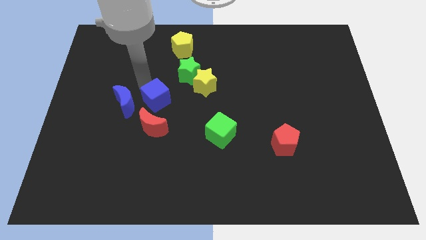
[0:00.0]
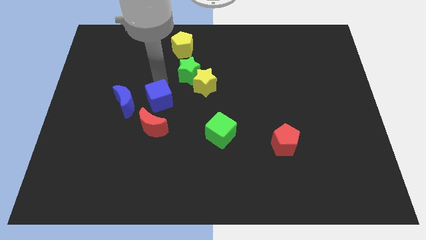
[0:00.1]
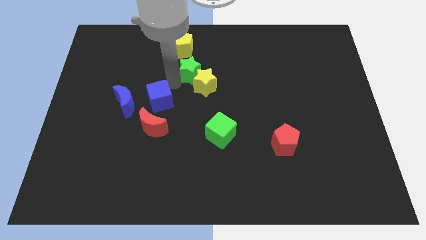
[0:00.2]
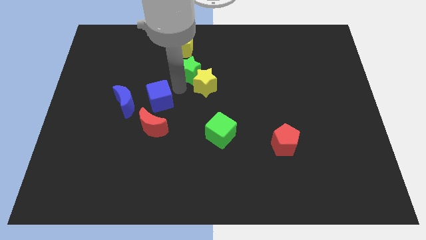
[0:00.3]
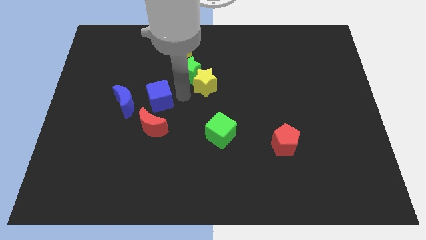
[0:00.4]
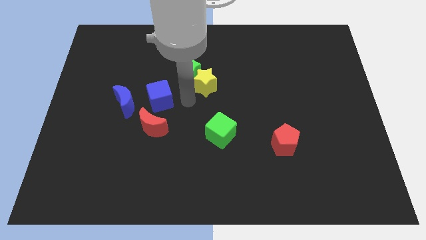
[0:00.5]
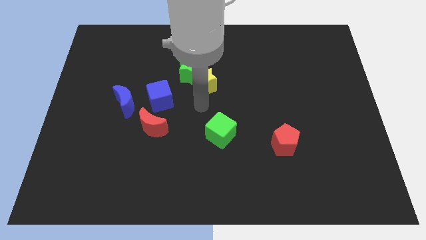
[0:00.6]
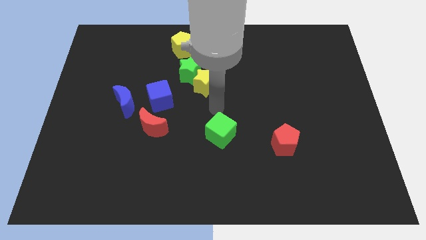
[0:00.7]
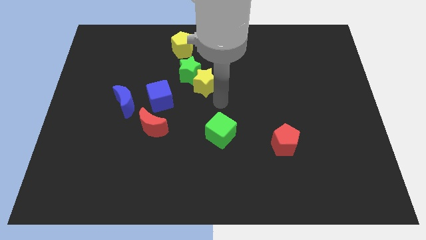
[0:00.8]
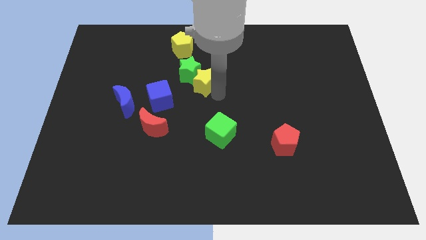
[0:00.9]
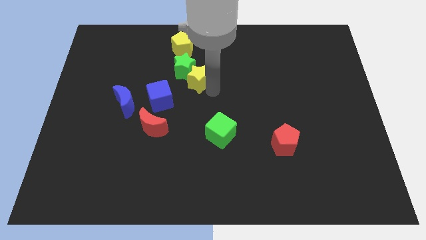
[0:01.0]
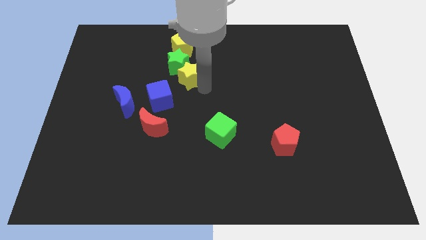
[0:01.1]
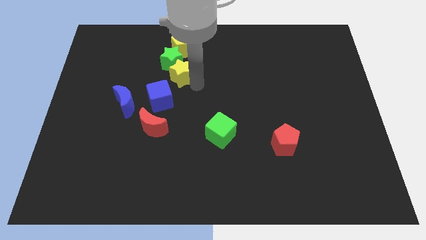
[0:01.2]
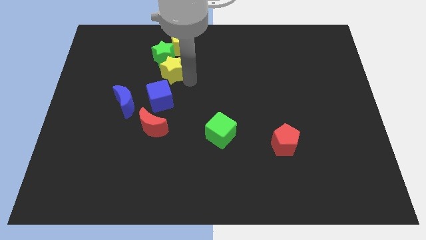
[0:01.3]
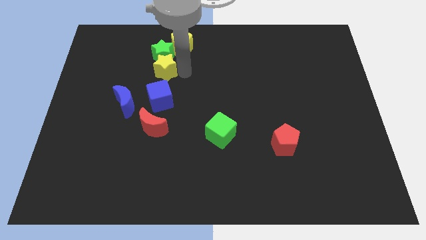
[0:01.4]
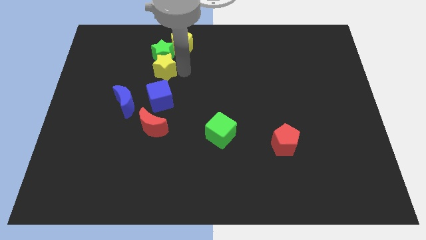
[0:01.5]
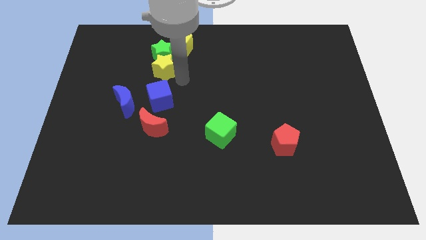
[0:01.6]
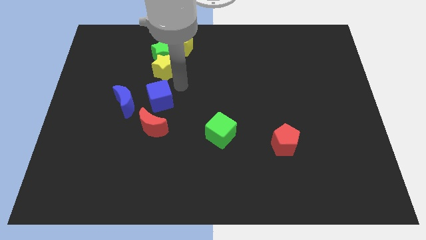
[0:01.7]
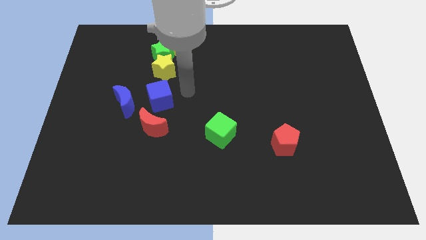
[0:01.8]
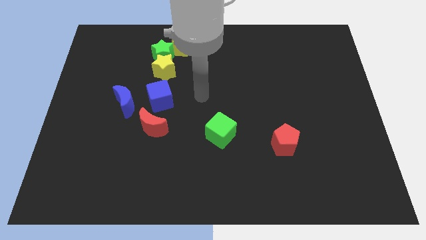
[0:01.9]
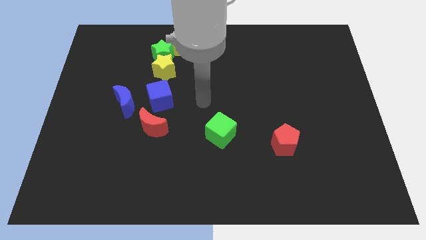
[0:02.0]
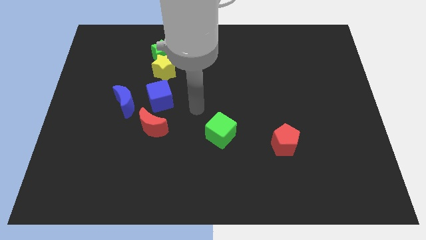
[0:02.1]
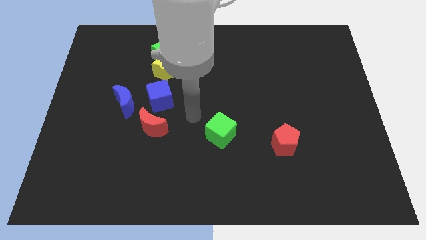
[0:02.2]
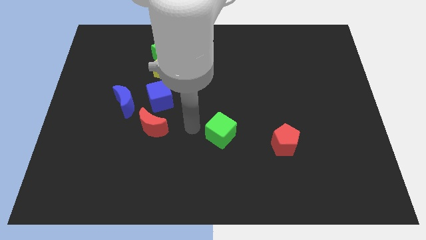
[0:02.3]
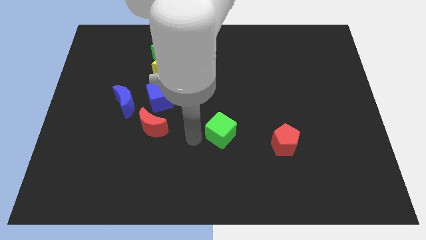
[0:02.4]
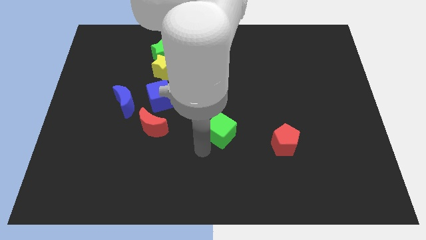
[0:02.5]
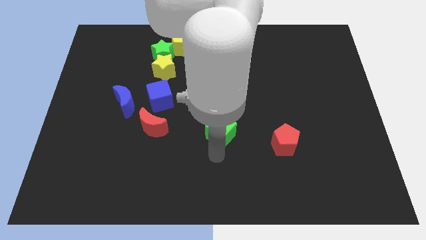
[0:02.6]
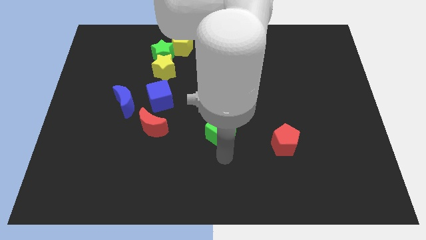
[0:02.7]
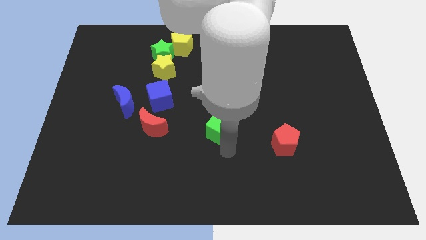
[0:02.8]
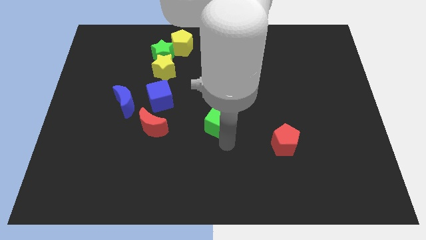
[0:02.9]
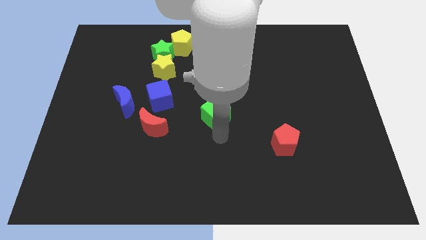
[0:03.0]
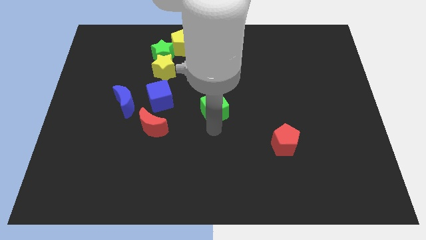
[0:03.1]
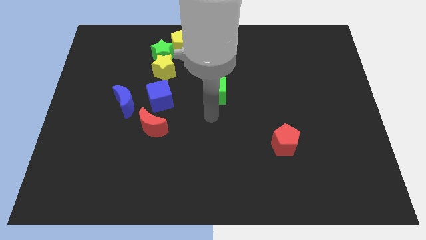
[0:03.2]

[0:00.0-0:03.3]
move the yellow star above the blue cube

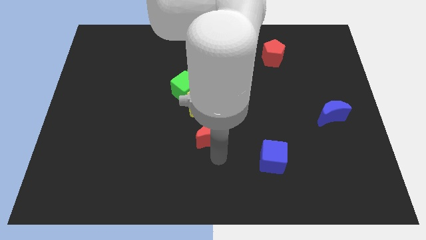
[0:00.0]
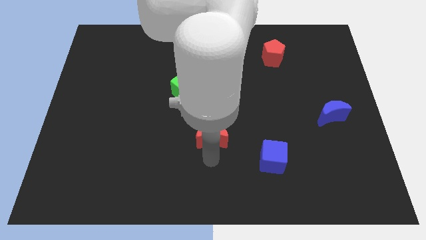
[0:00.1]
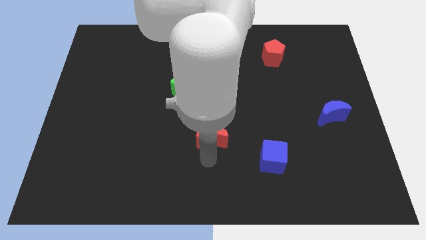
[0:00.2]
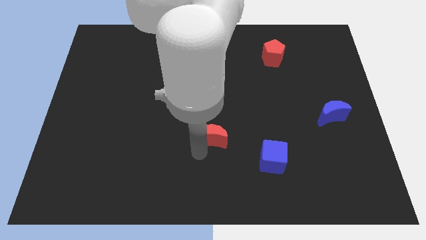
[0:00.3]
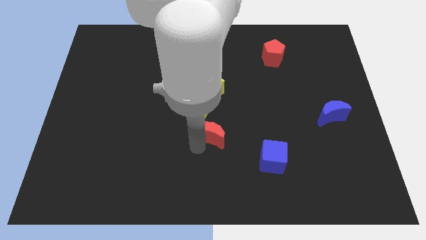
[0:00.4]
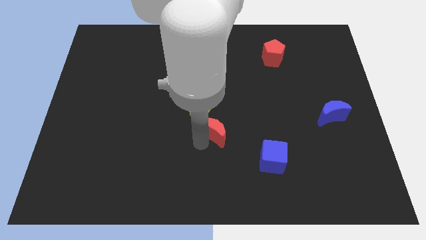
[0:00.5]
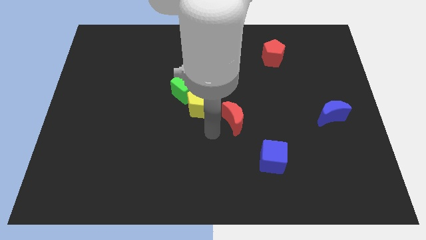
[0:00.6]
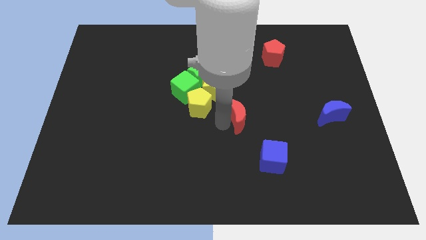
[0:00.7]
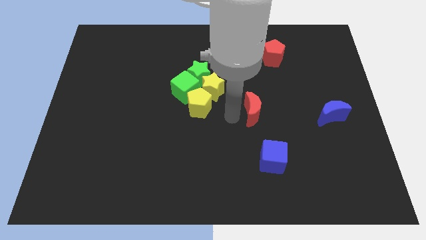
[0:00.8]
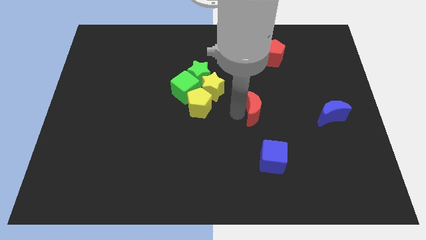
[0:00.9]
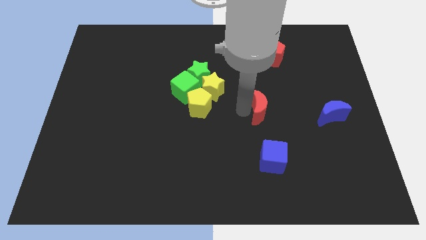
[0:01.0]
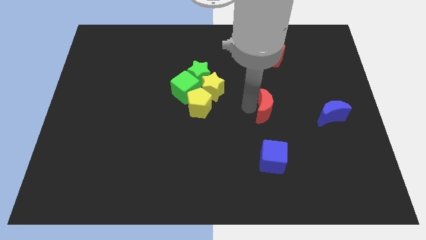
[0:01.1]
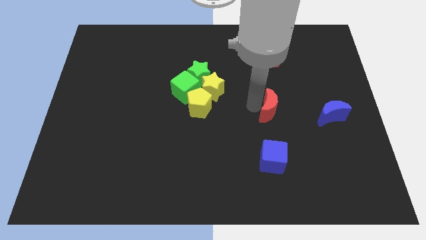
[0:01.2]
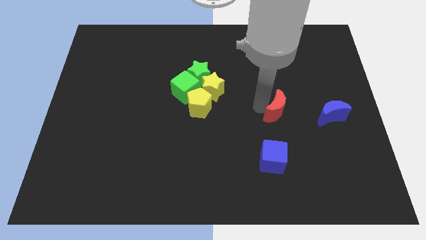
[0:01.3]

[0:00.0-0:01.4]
put the red moon vertically above the blue cube

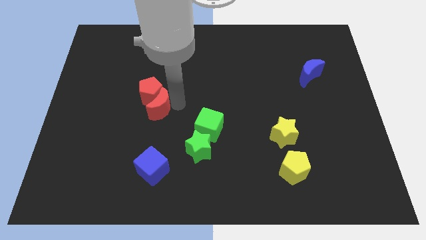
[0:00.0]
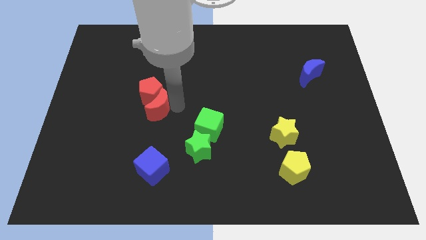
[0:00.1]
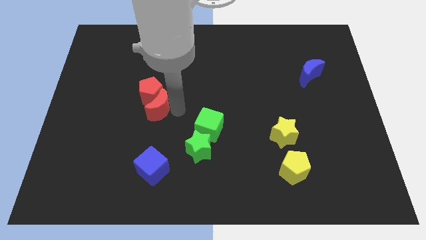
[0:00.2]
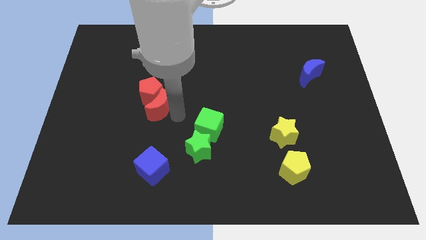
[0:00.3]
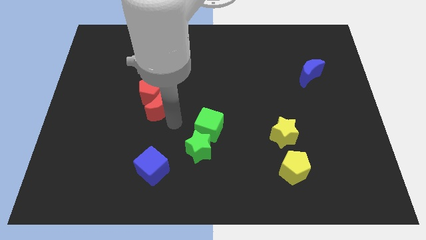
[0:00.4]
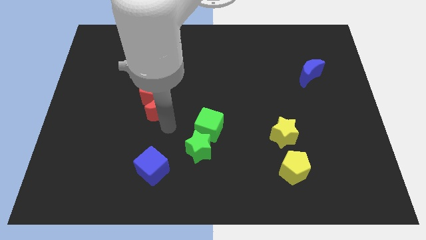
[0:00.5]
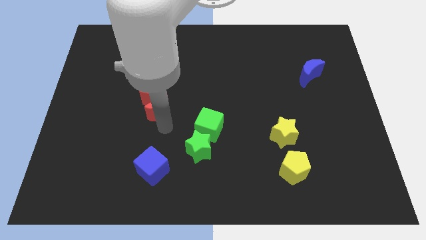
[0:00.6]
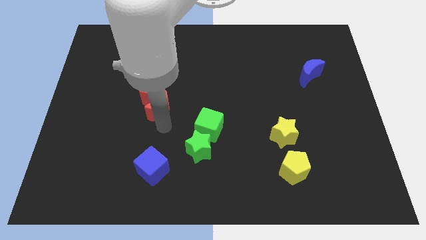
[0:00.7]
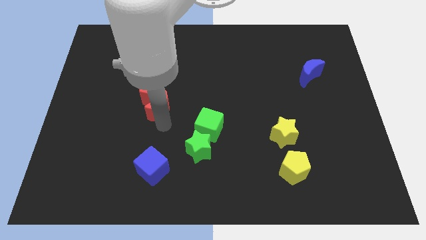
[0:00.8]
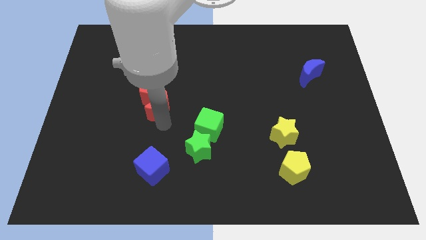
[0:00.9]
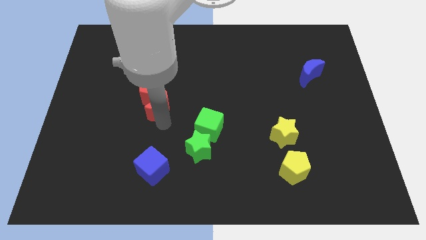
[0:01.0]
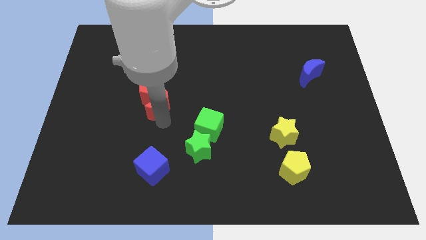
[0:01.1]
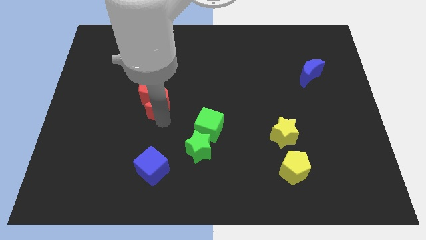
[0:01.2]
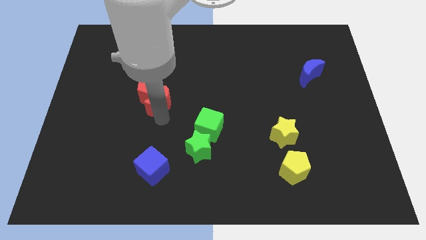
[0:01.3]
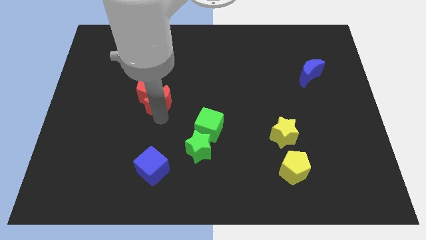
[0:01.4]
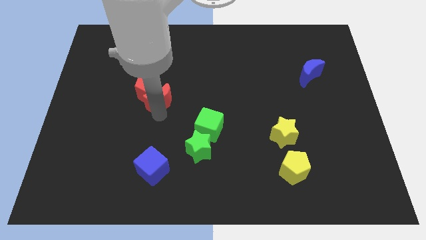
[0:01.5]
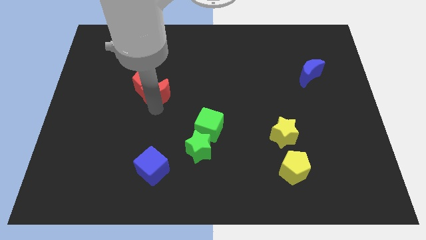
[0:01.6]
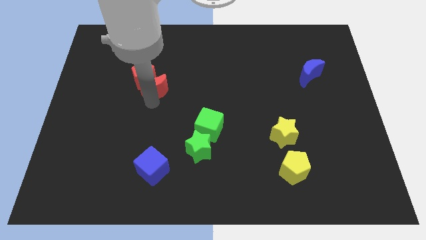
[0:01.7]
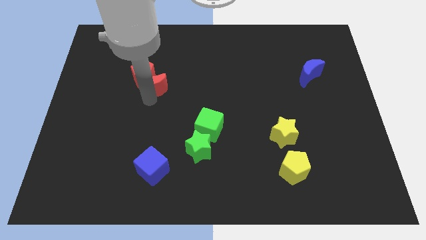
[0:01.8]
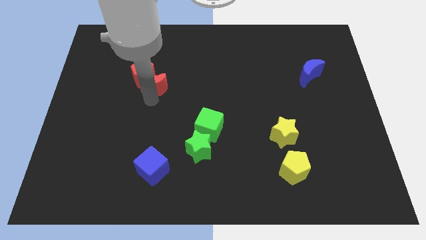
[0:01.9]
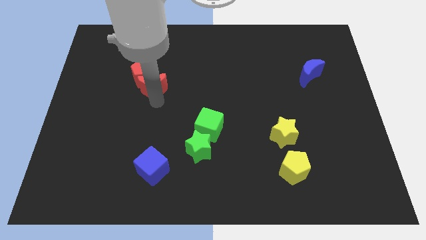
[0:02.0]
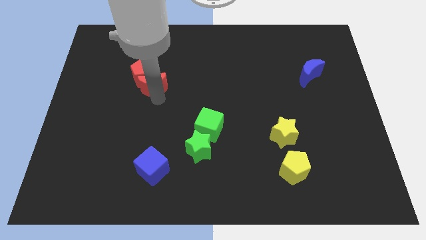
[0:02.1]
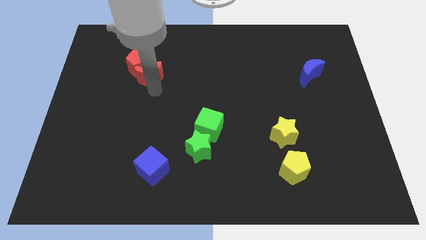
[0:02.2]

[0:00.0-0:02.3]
push the red pentagon and red moon towards upward

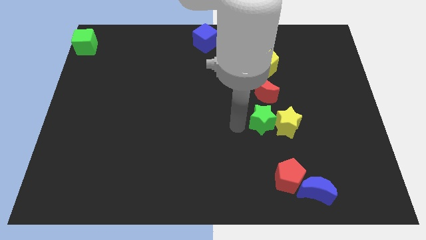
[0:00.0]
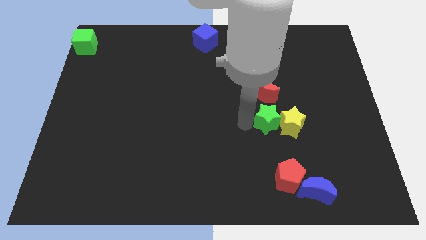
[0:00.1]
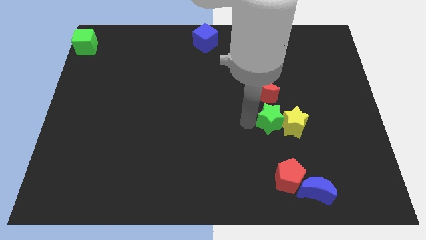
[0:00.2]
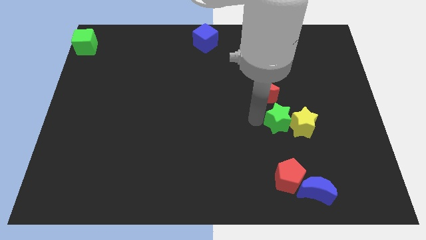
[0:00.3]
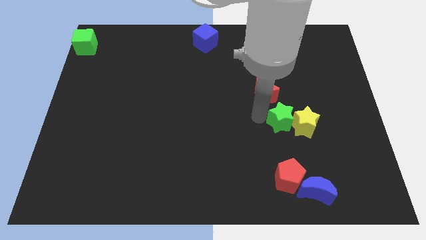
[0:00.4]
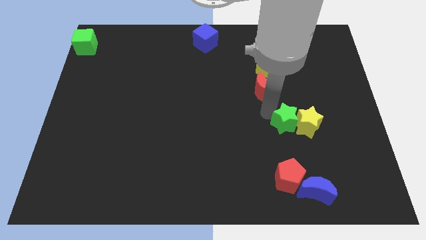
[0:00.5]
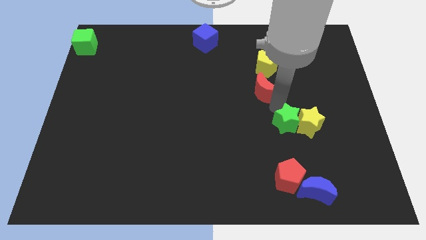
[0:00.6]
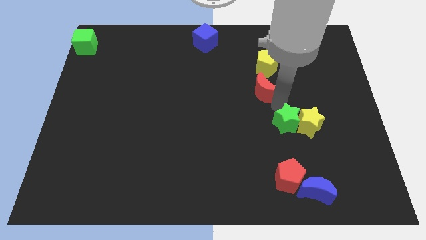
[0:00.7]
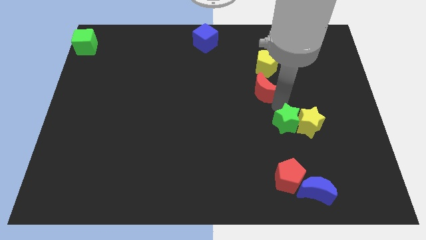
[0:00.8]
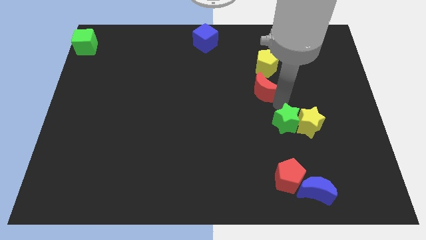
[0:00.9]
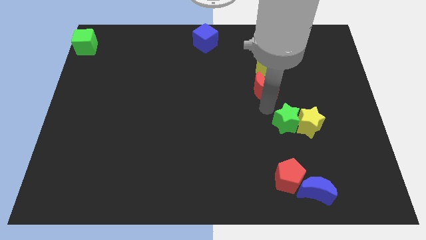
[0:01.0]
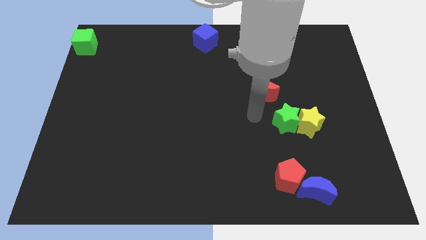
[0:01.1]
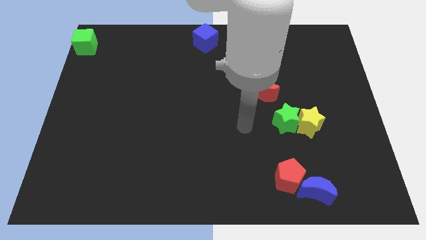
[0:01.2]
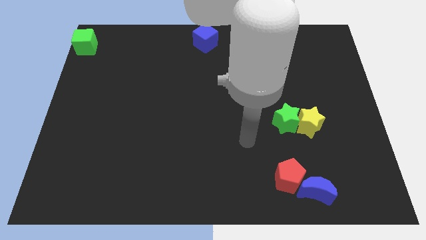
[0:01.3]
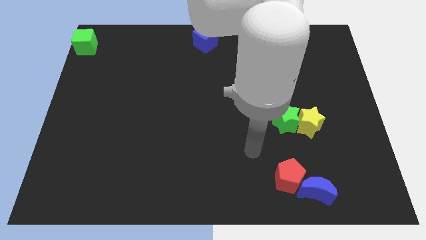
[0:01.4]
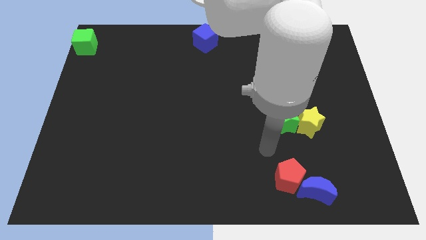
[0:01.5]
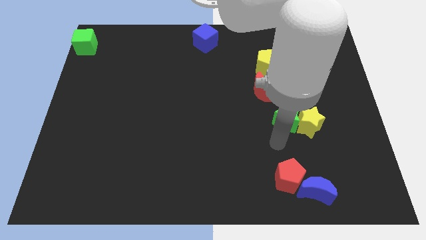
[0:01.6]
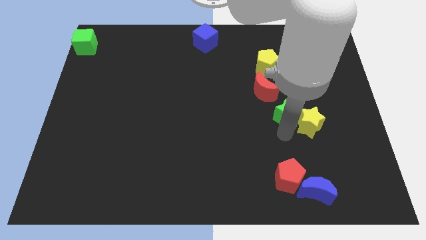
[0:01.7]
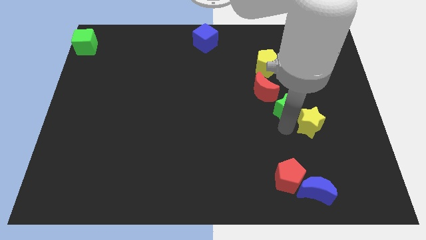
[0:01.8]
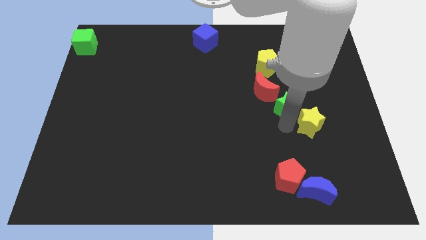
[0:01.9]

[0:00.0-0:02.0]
move the green star along with the yellow star slightly right
